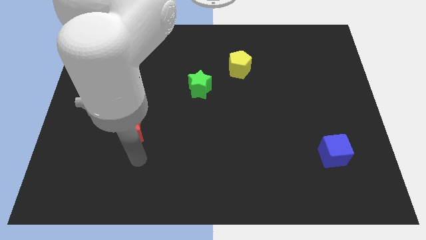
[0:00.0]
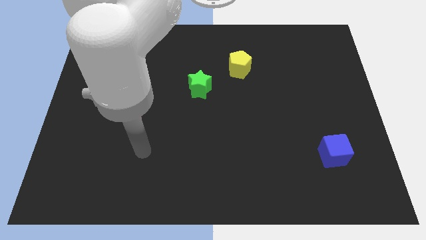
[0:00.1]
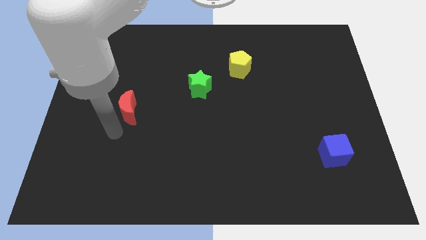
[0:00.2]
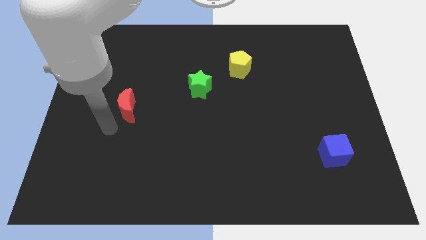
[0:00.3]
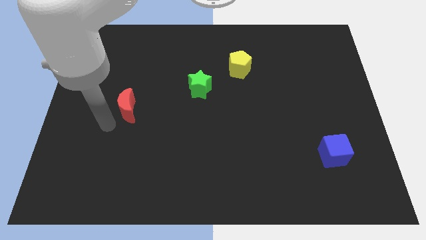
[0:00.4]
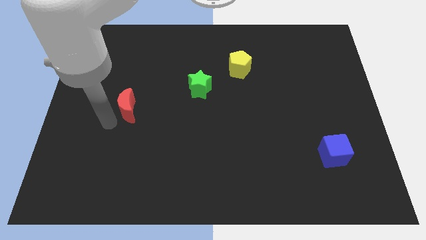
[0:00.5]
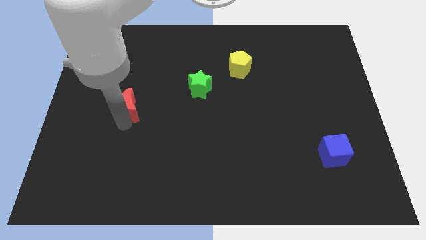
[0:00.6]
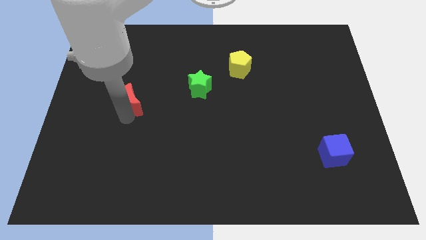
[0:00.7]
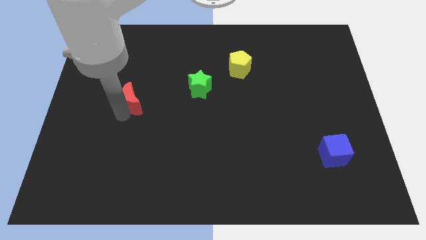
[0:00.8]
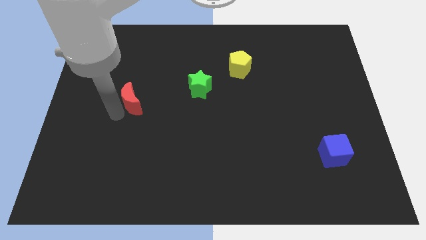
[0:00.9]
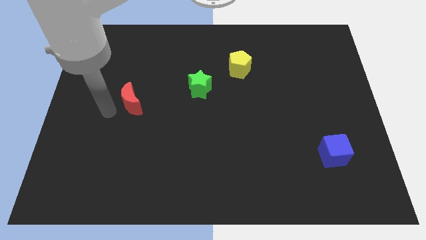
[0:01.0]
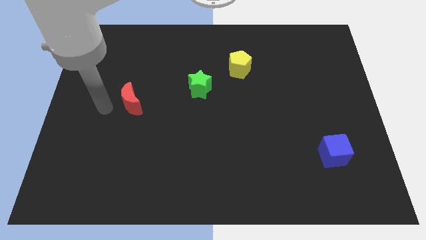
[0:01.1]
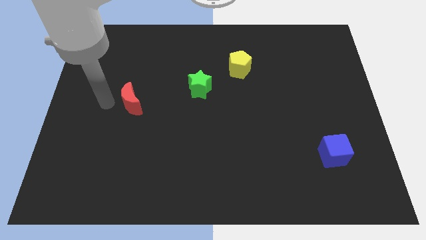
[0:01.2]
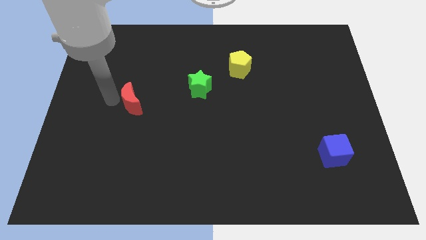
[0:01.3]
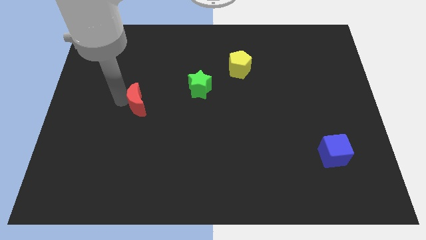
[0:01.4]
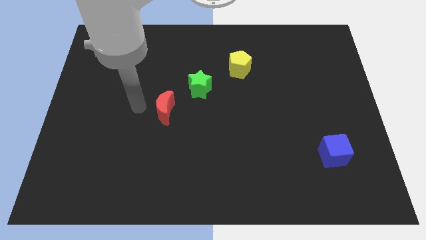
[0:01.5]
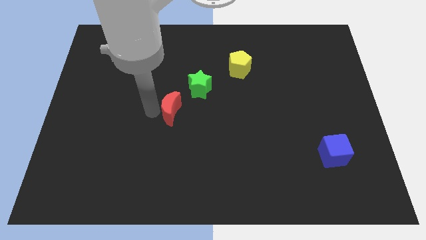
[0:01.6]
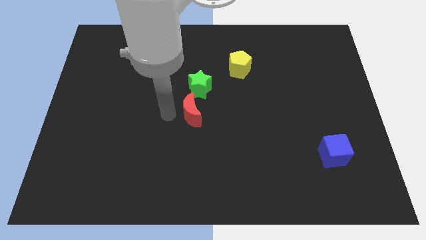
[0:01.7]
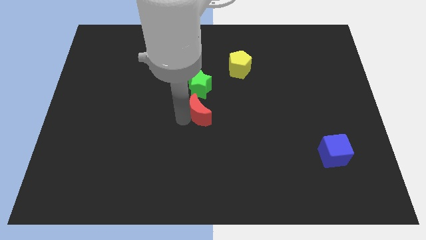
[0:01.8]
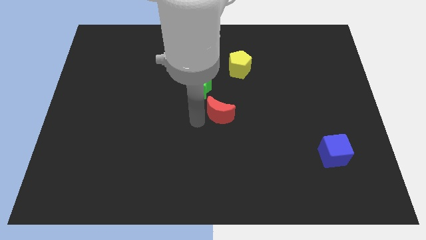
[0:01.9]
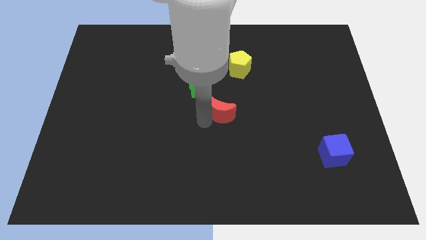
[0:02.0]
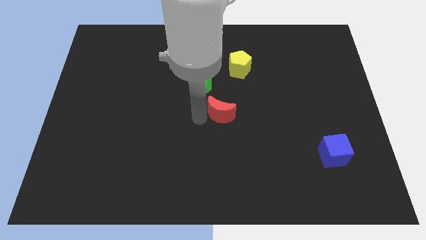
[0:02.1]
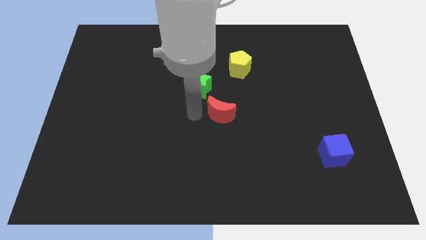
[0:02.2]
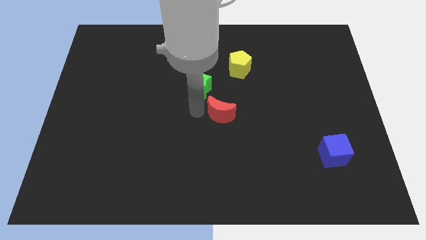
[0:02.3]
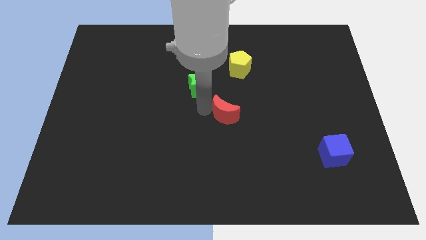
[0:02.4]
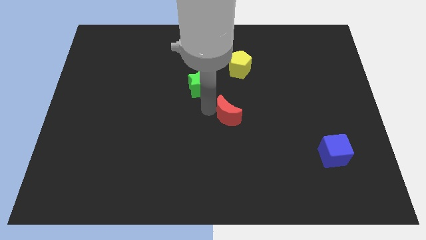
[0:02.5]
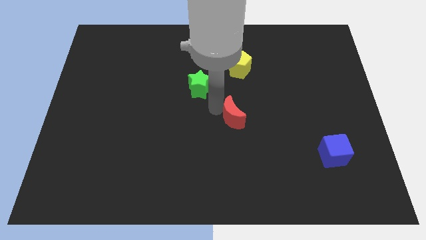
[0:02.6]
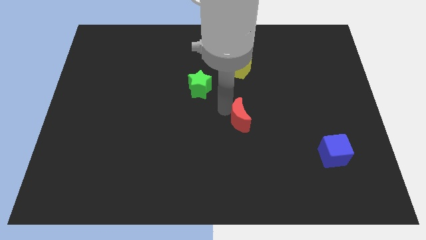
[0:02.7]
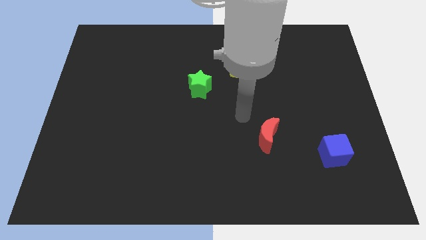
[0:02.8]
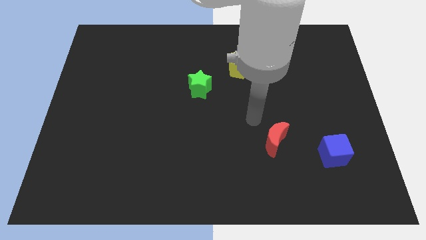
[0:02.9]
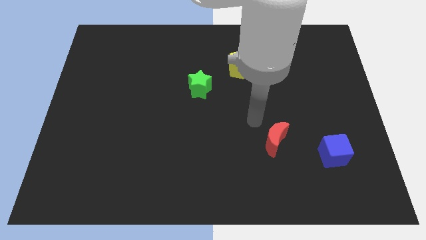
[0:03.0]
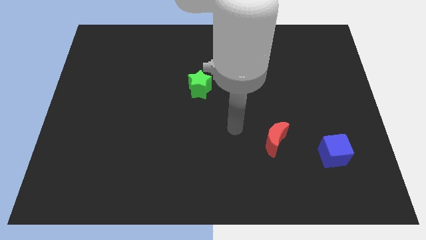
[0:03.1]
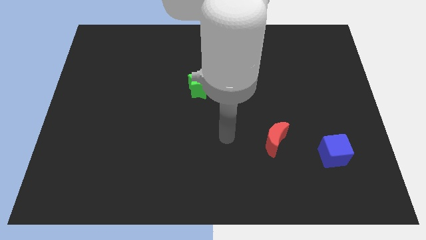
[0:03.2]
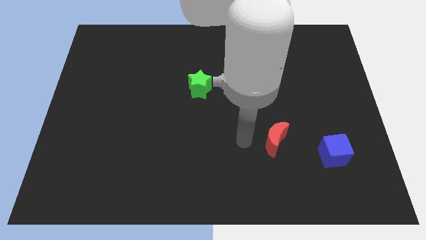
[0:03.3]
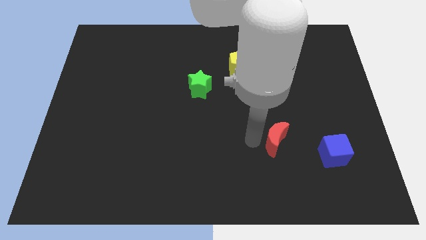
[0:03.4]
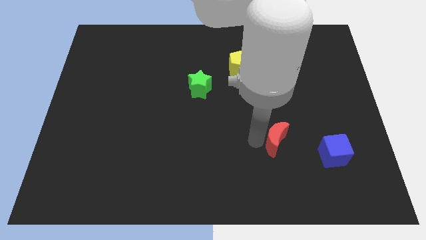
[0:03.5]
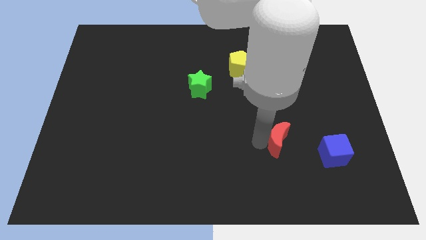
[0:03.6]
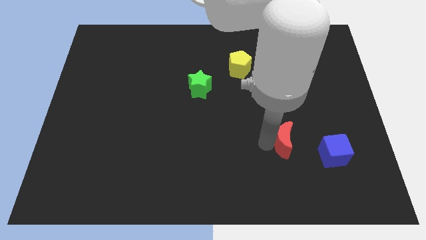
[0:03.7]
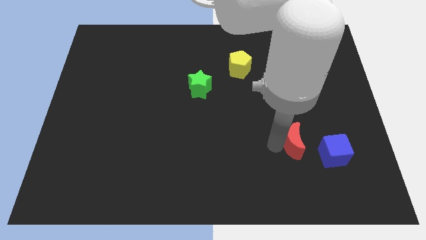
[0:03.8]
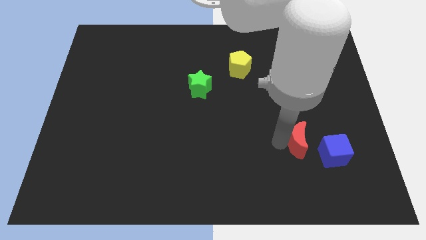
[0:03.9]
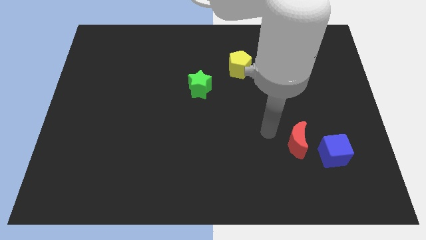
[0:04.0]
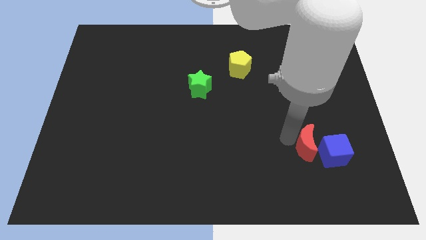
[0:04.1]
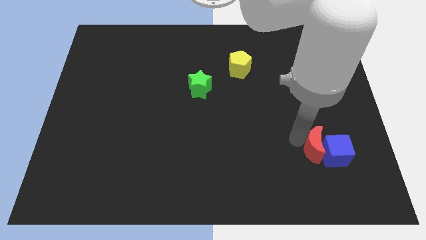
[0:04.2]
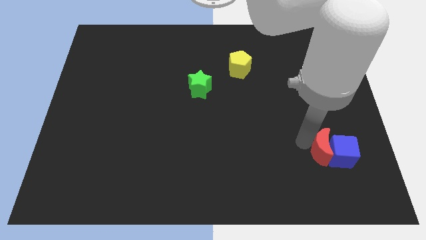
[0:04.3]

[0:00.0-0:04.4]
push the red moon close to the blue block

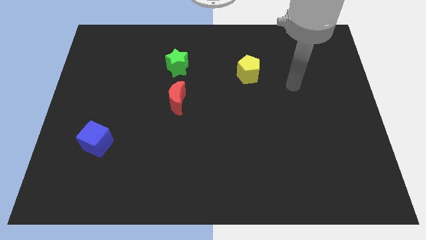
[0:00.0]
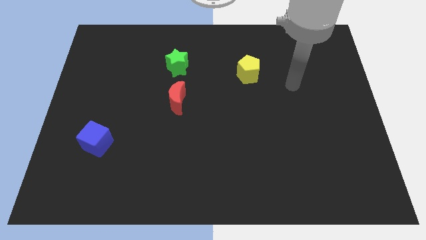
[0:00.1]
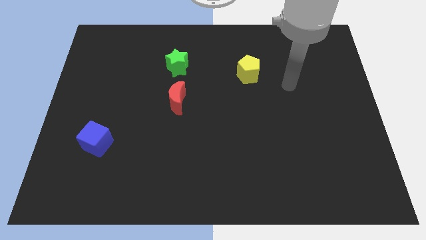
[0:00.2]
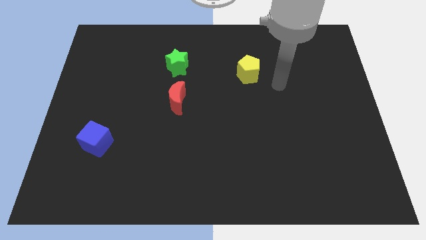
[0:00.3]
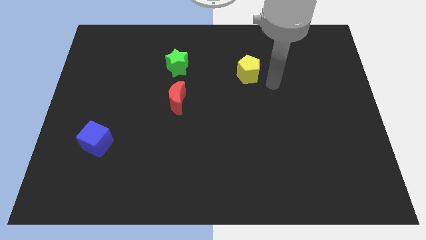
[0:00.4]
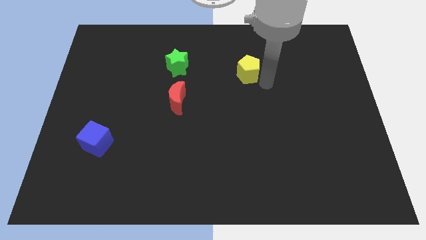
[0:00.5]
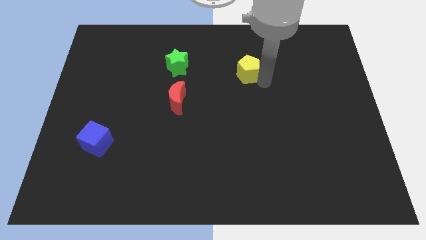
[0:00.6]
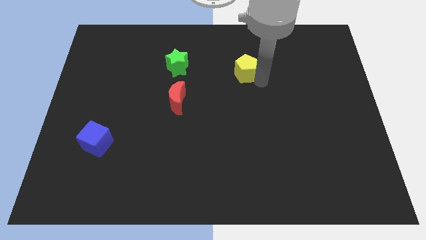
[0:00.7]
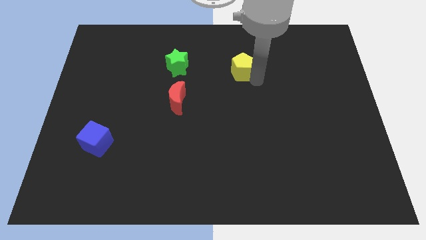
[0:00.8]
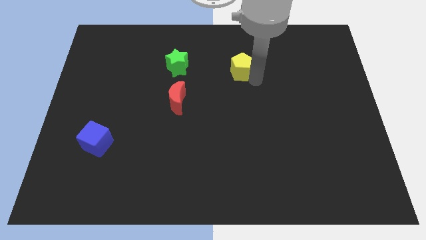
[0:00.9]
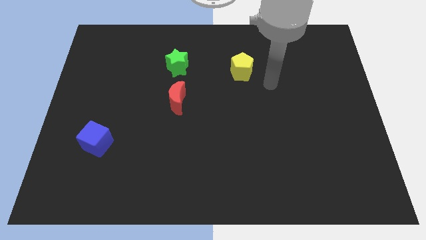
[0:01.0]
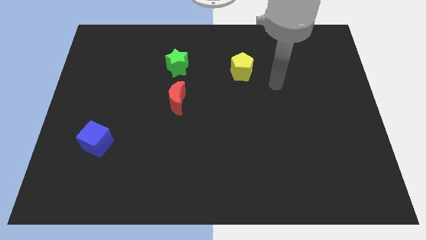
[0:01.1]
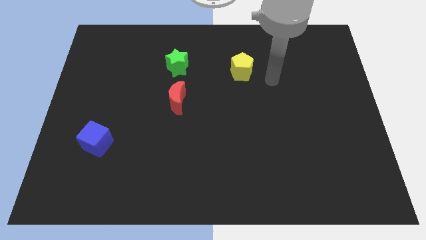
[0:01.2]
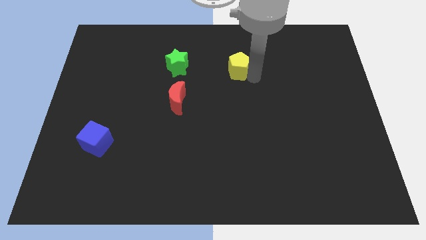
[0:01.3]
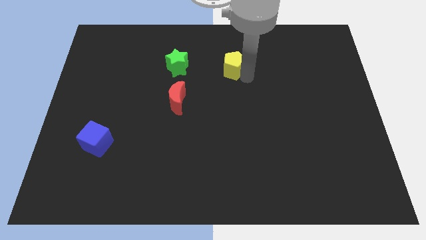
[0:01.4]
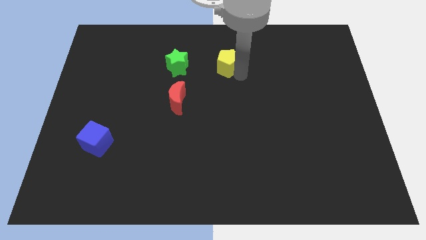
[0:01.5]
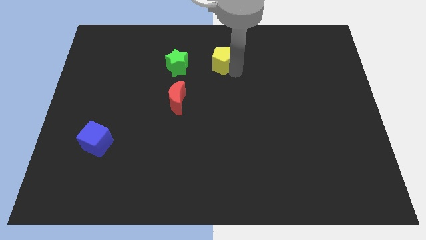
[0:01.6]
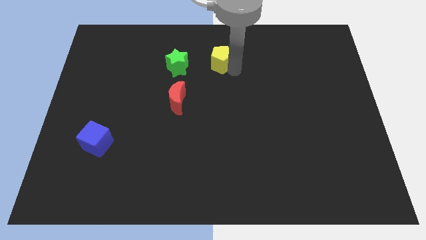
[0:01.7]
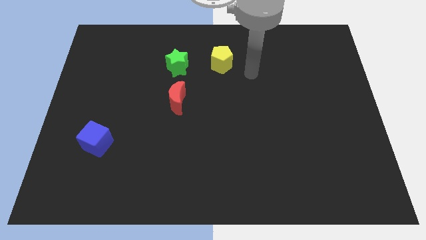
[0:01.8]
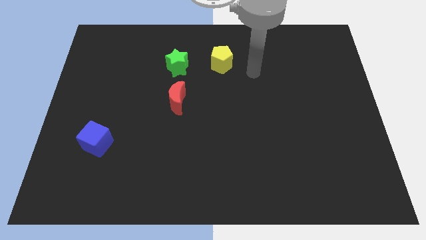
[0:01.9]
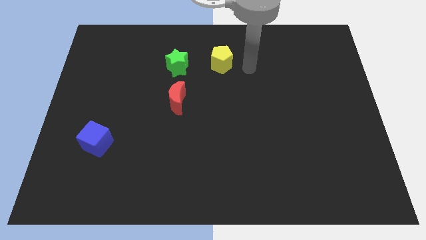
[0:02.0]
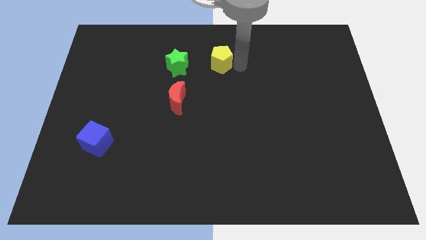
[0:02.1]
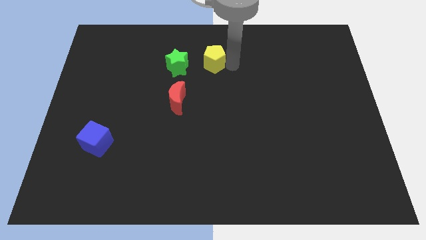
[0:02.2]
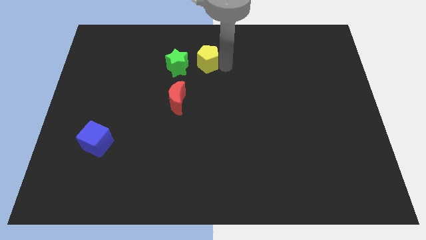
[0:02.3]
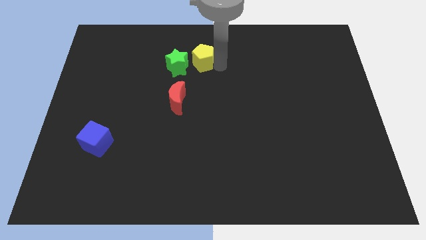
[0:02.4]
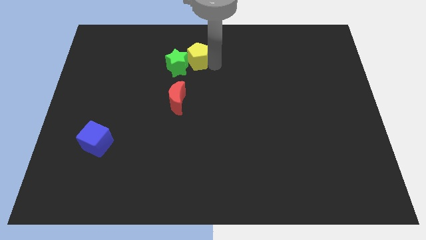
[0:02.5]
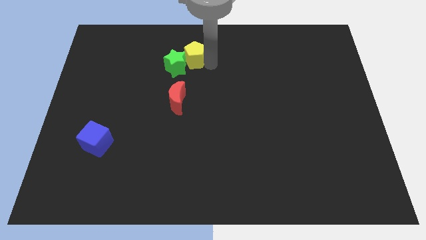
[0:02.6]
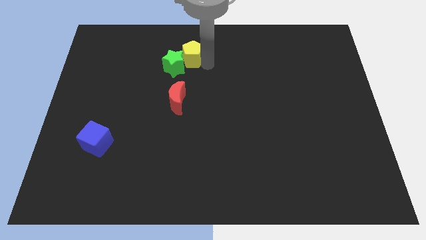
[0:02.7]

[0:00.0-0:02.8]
push the yellow block close to the star

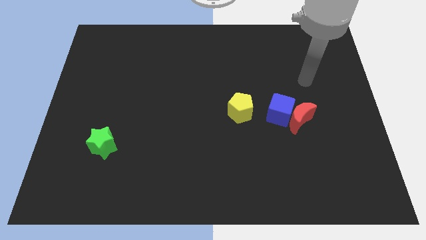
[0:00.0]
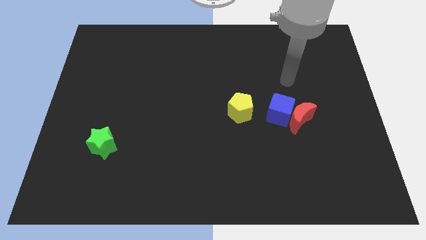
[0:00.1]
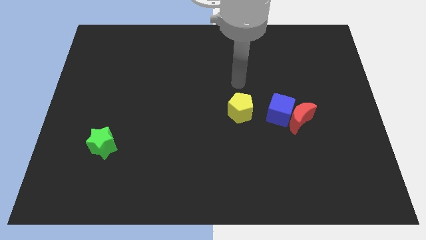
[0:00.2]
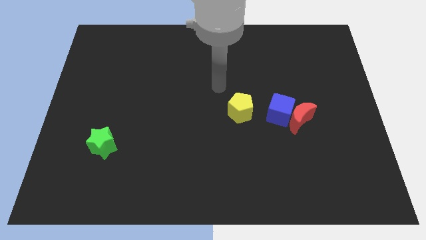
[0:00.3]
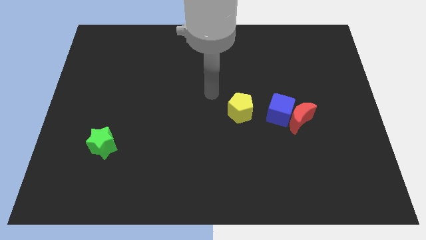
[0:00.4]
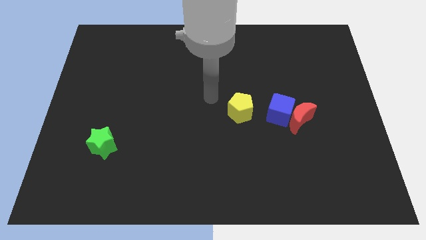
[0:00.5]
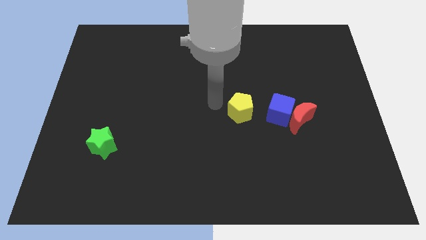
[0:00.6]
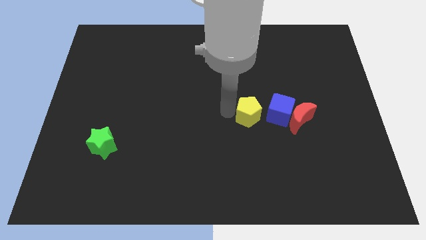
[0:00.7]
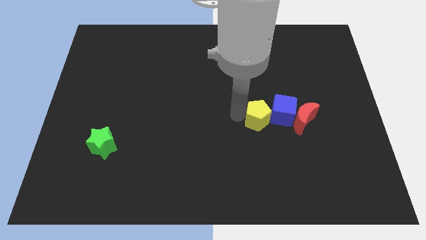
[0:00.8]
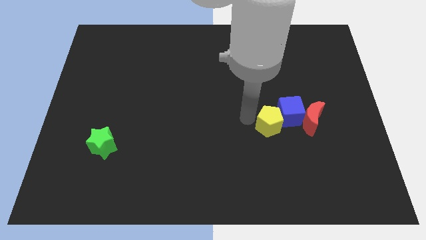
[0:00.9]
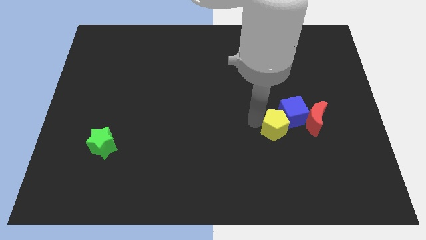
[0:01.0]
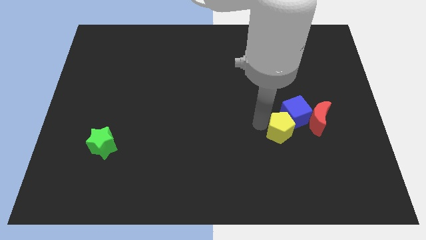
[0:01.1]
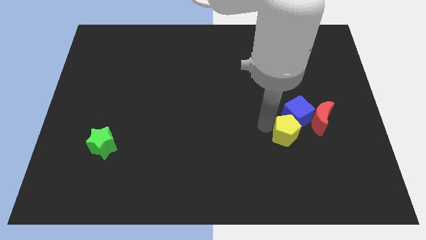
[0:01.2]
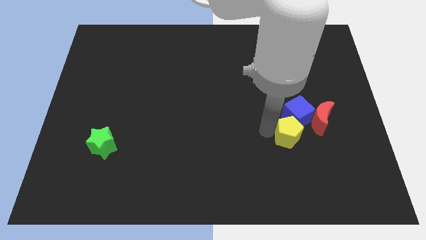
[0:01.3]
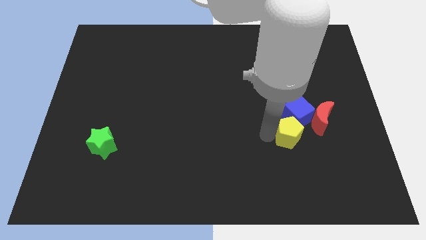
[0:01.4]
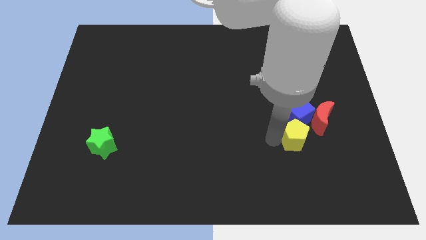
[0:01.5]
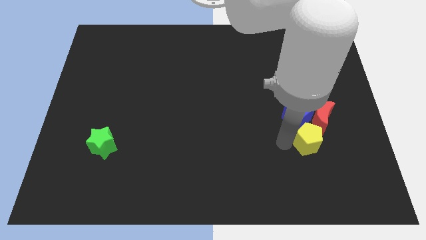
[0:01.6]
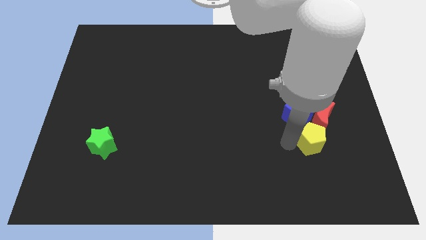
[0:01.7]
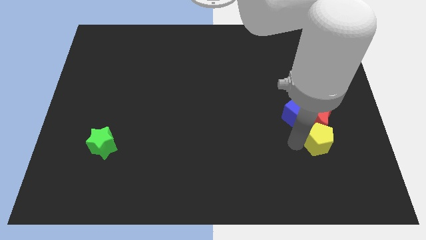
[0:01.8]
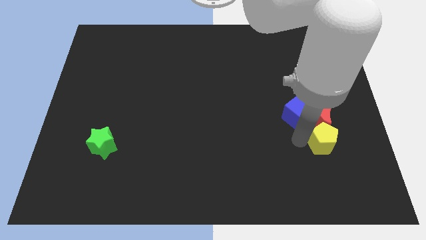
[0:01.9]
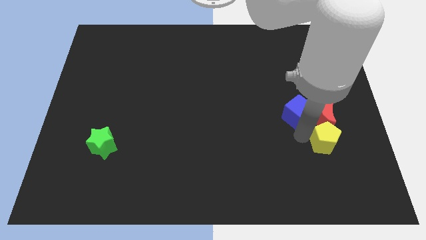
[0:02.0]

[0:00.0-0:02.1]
move the yellow block towards the moon
